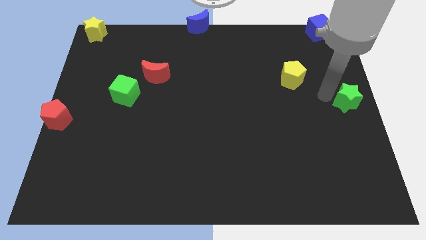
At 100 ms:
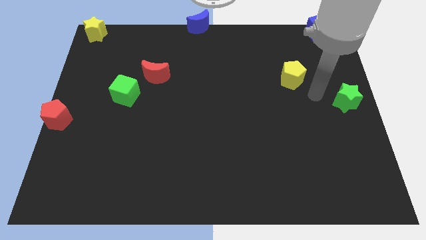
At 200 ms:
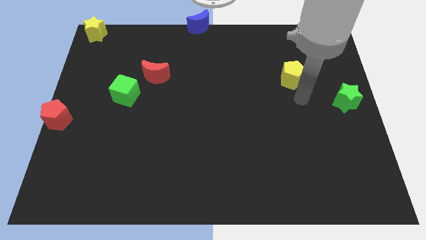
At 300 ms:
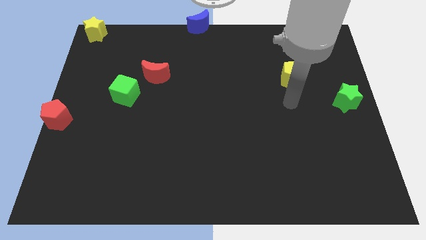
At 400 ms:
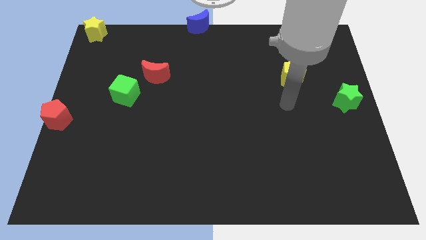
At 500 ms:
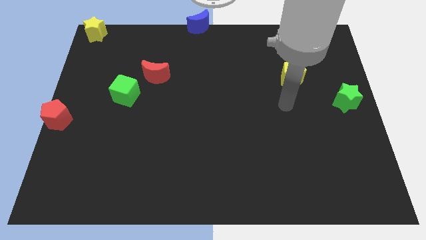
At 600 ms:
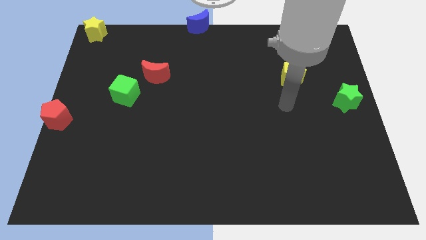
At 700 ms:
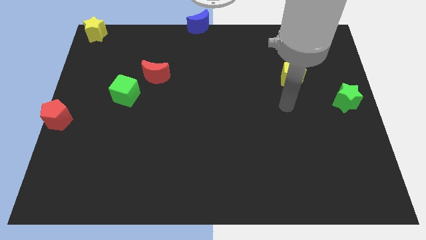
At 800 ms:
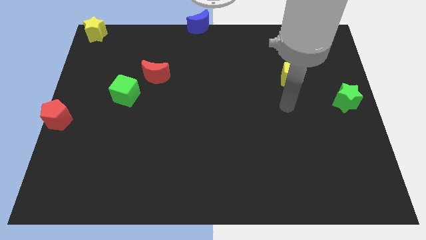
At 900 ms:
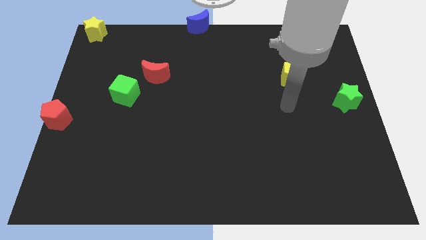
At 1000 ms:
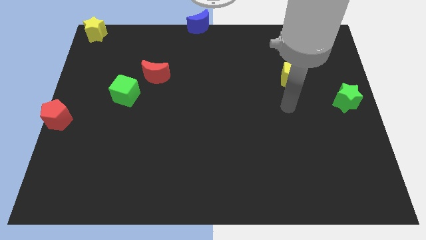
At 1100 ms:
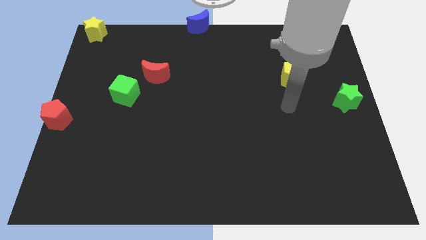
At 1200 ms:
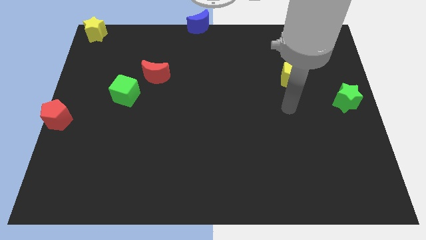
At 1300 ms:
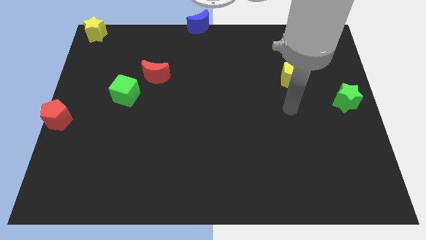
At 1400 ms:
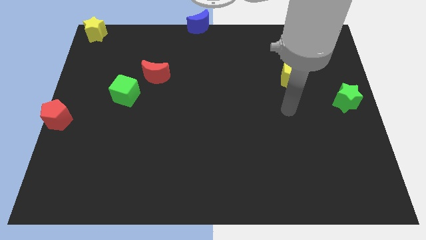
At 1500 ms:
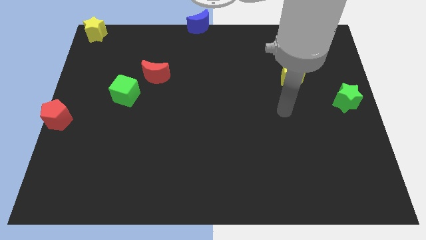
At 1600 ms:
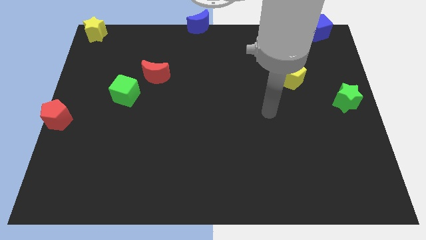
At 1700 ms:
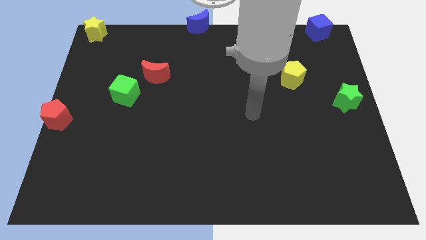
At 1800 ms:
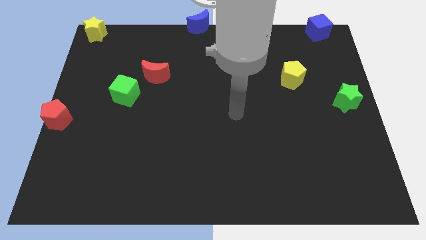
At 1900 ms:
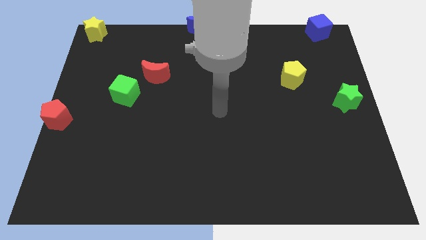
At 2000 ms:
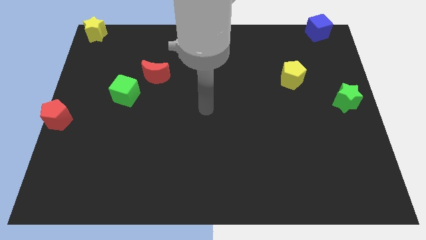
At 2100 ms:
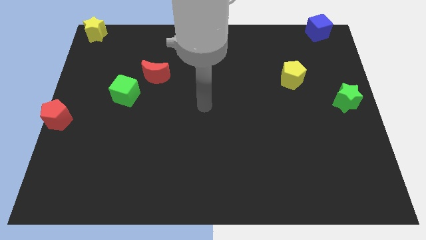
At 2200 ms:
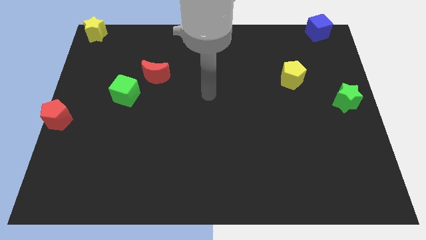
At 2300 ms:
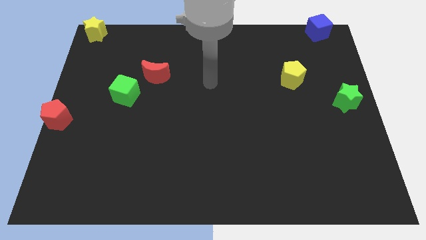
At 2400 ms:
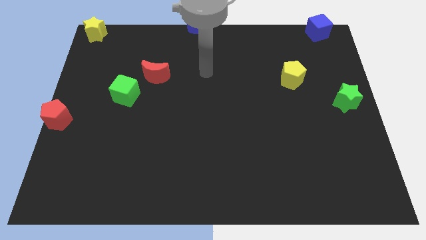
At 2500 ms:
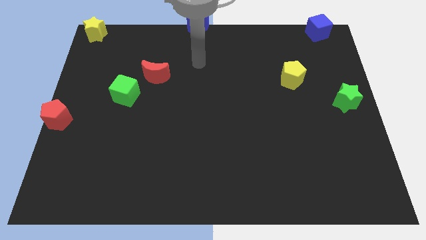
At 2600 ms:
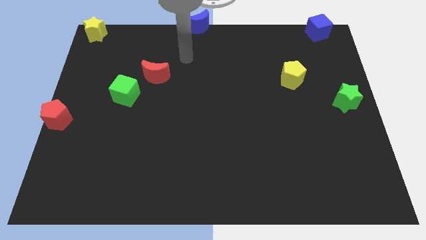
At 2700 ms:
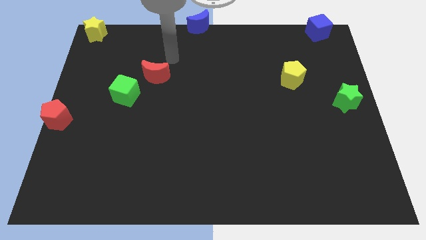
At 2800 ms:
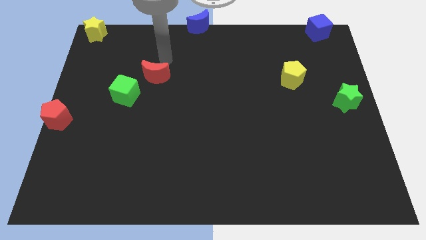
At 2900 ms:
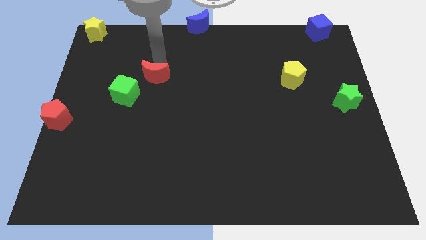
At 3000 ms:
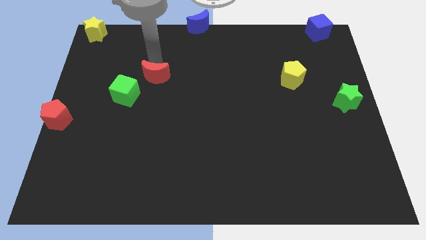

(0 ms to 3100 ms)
move your arm away from the green star

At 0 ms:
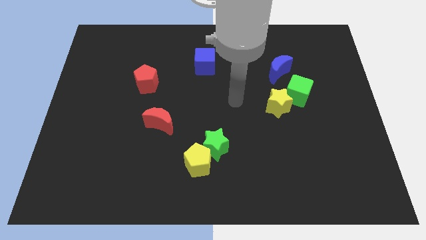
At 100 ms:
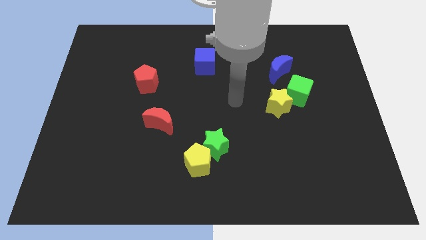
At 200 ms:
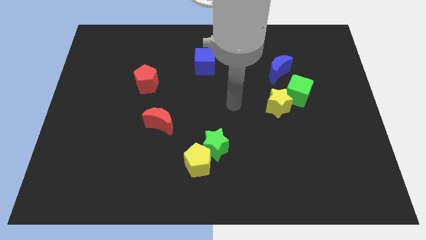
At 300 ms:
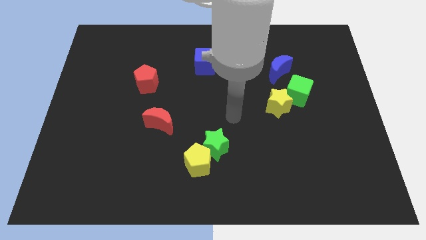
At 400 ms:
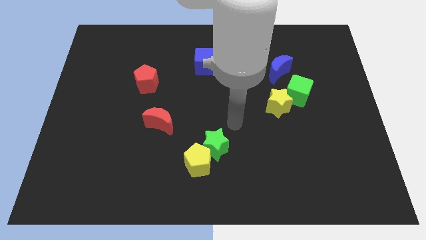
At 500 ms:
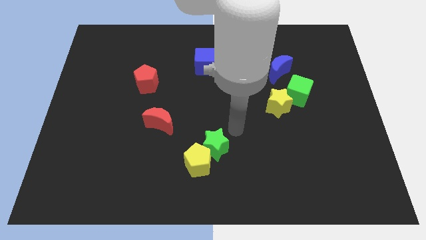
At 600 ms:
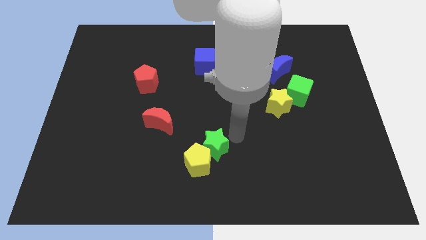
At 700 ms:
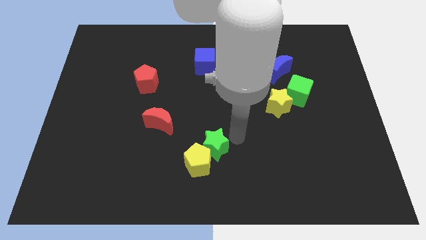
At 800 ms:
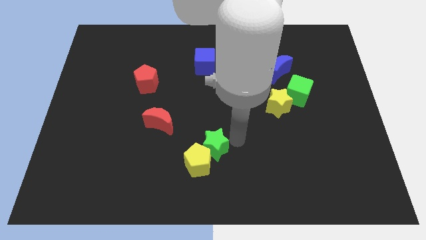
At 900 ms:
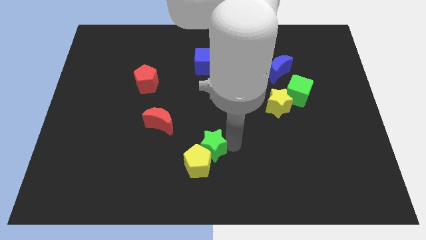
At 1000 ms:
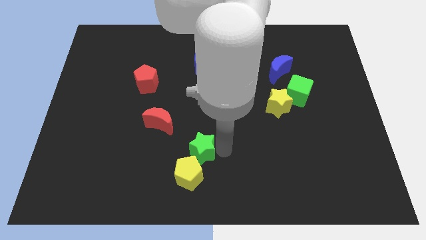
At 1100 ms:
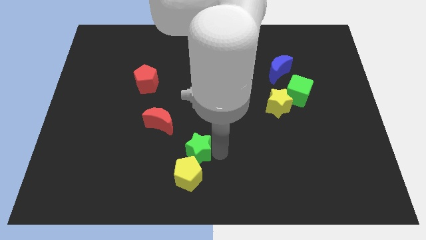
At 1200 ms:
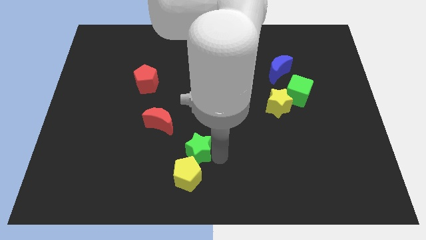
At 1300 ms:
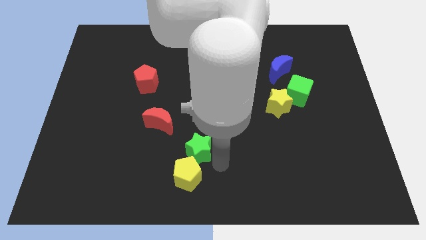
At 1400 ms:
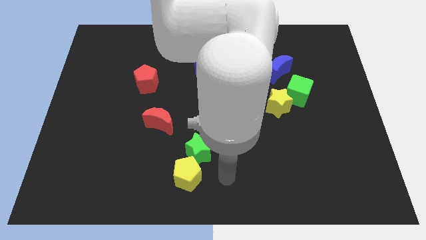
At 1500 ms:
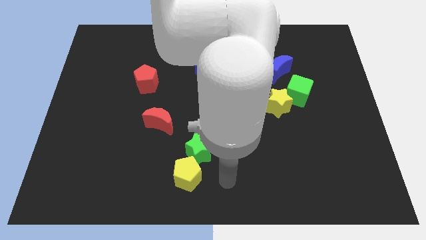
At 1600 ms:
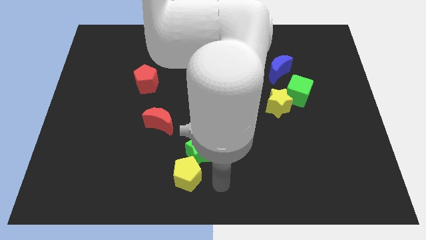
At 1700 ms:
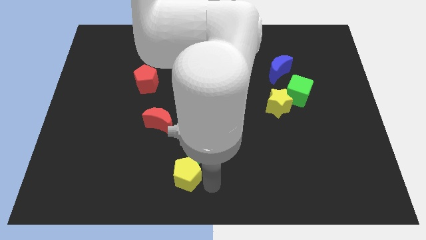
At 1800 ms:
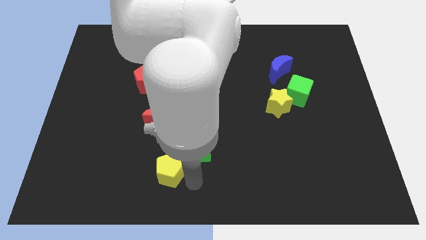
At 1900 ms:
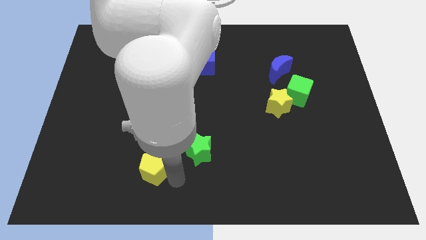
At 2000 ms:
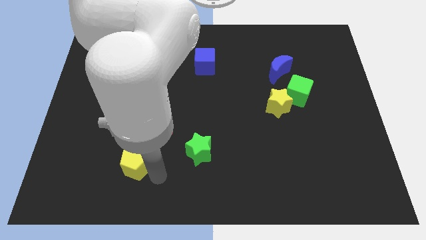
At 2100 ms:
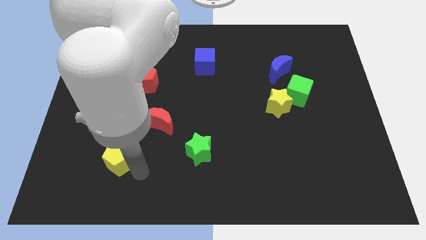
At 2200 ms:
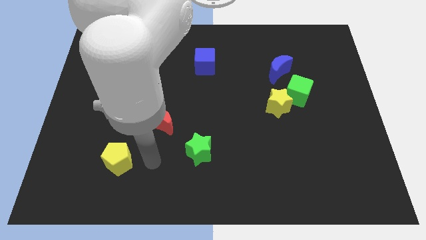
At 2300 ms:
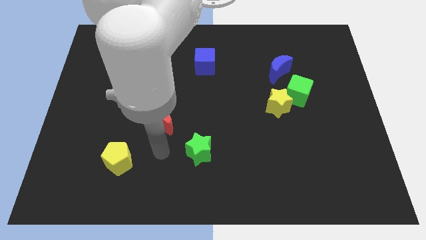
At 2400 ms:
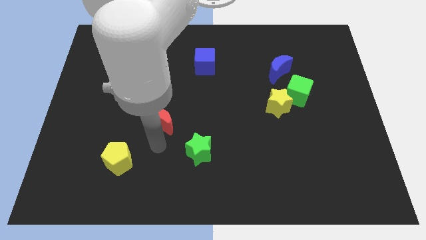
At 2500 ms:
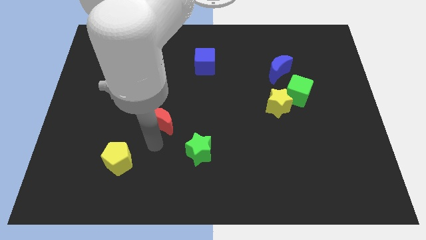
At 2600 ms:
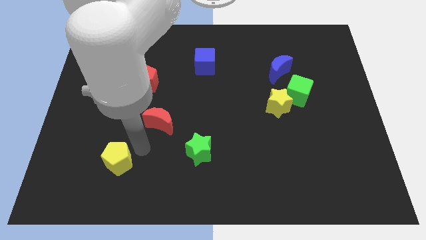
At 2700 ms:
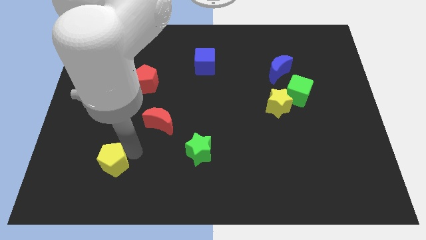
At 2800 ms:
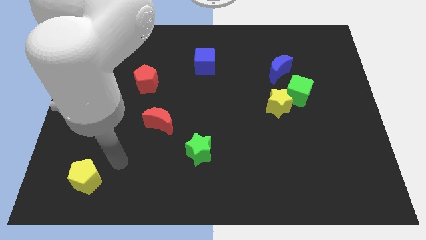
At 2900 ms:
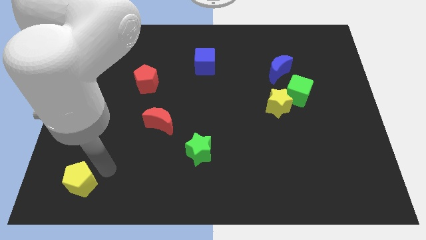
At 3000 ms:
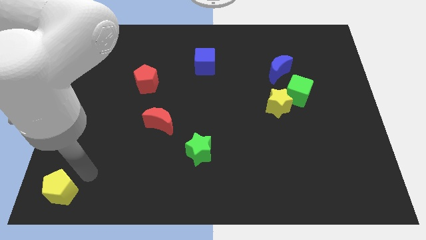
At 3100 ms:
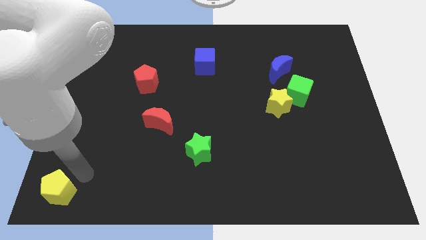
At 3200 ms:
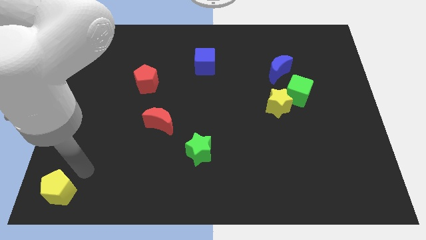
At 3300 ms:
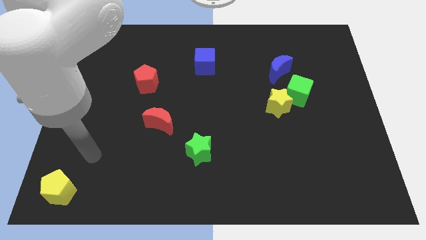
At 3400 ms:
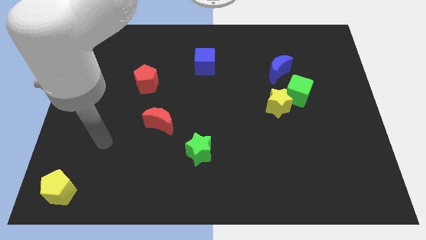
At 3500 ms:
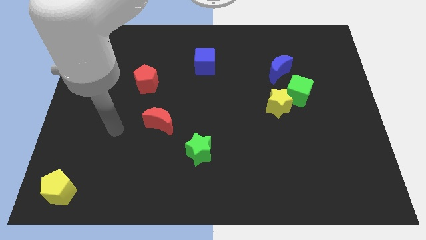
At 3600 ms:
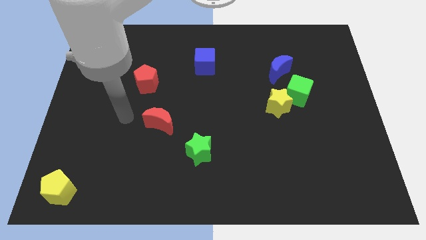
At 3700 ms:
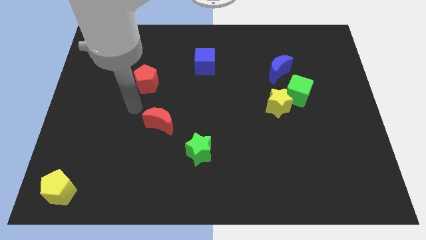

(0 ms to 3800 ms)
place the yellow pentagon at bottom left corner of the board

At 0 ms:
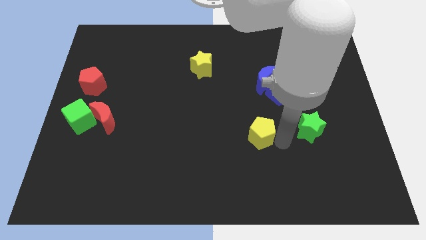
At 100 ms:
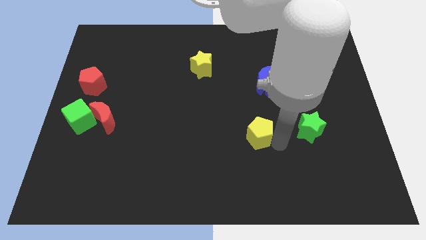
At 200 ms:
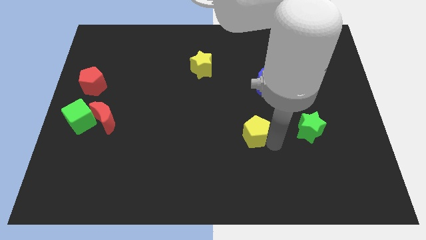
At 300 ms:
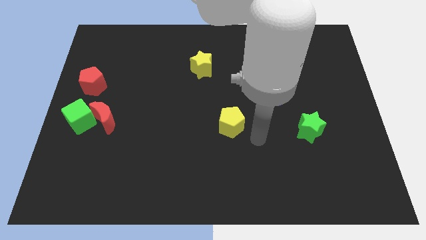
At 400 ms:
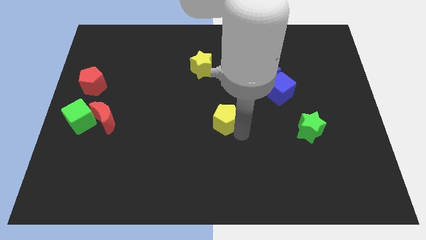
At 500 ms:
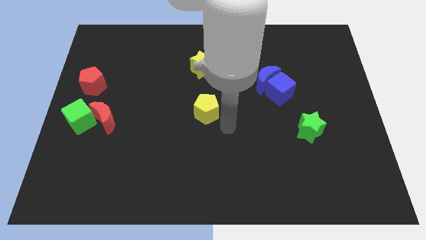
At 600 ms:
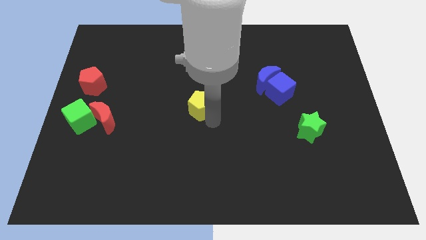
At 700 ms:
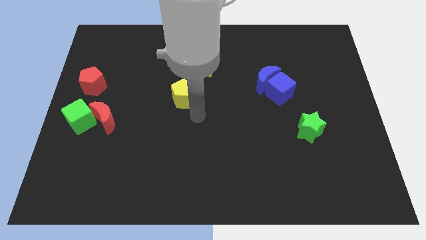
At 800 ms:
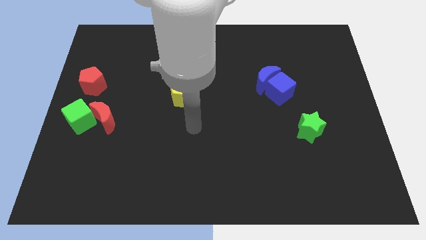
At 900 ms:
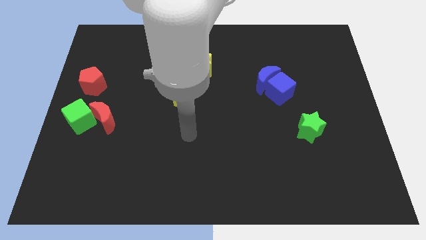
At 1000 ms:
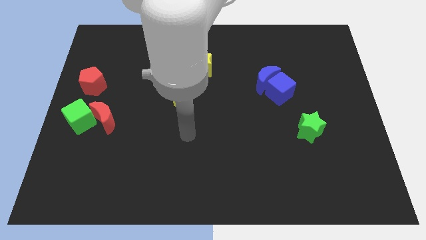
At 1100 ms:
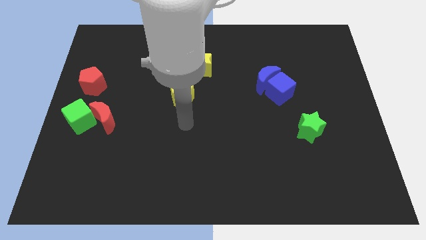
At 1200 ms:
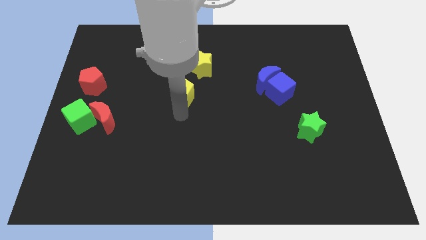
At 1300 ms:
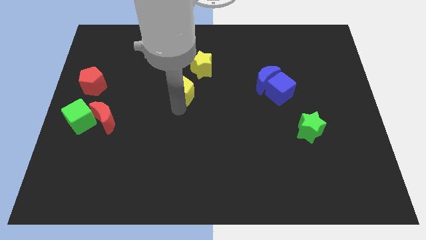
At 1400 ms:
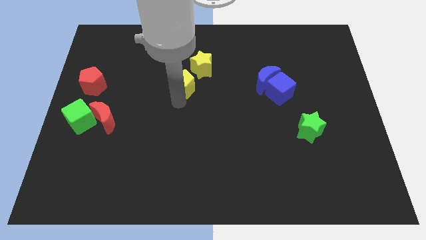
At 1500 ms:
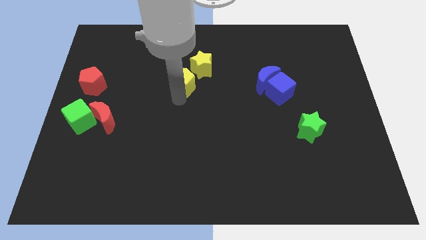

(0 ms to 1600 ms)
move the yellow pentagon to the bottom left of the yellow star

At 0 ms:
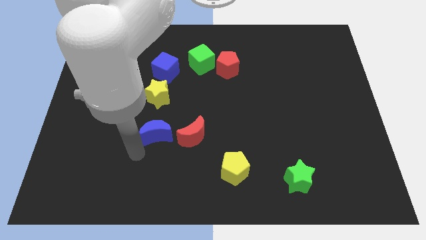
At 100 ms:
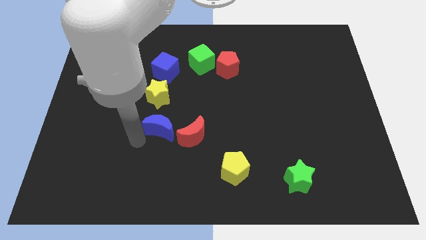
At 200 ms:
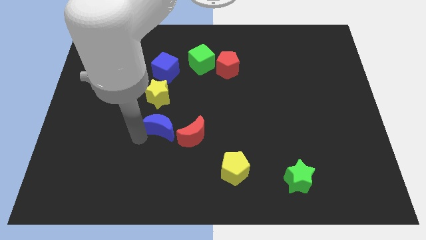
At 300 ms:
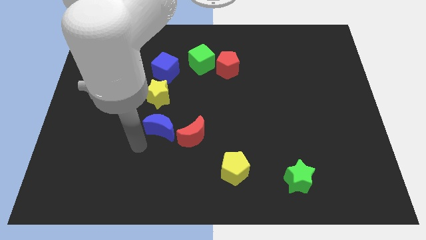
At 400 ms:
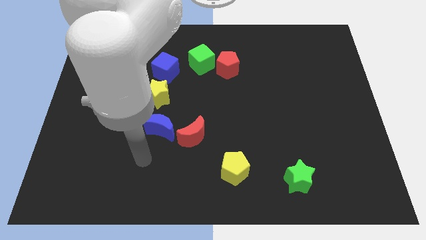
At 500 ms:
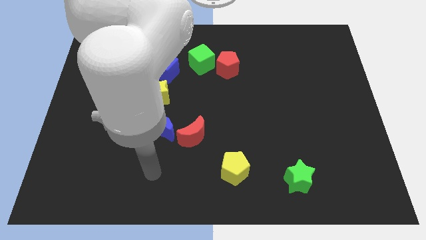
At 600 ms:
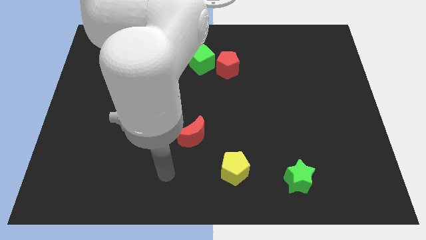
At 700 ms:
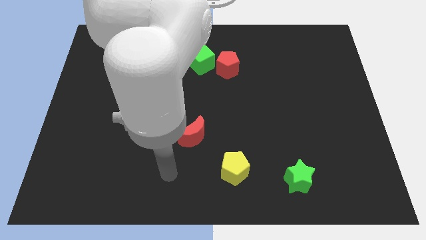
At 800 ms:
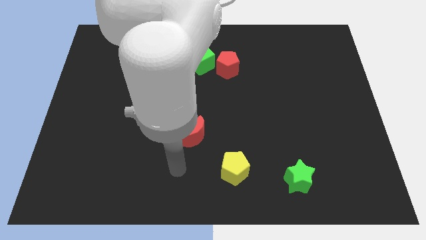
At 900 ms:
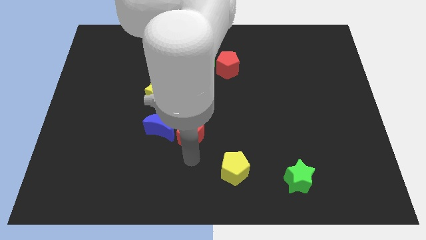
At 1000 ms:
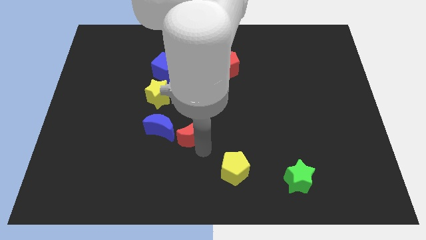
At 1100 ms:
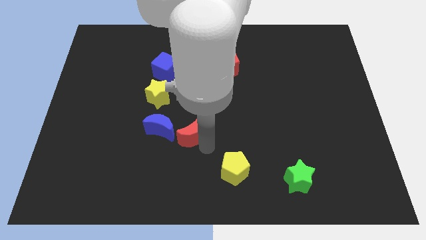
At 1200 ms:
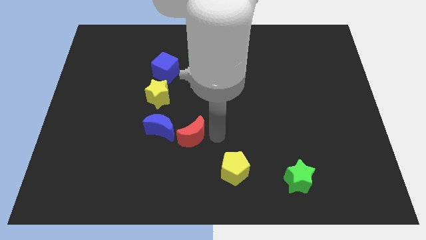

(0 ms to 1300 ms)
move the arm below the red crescent